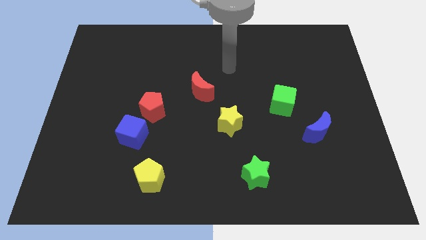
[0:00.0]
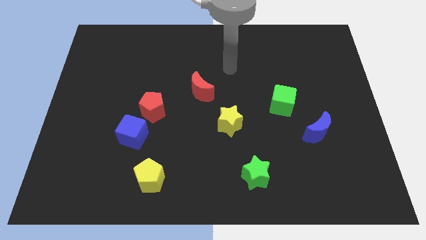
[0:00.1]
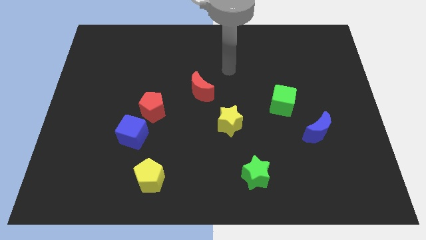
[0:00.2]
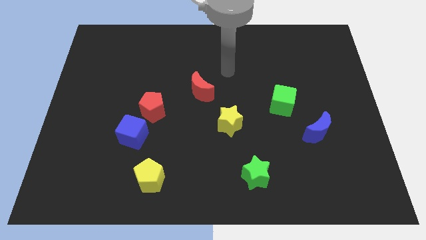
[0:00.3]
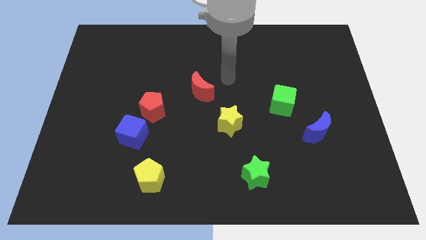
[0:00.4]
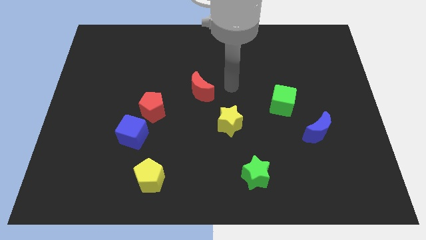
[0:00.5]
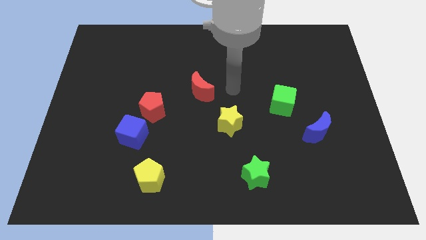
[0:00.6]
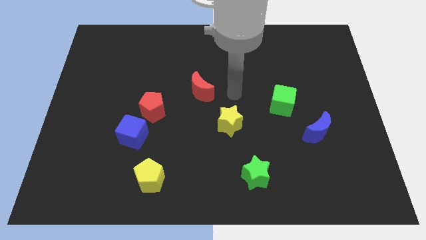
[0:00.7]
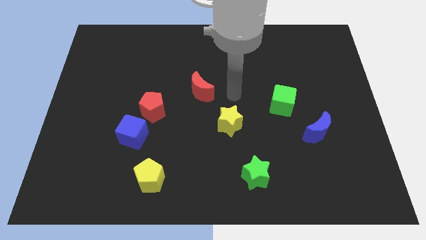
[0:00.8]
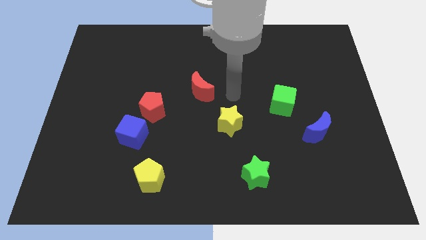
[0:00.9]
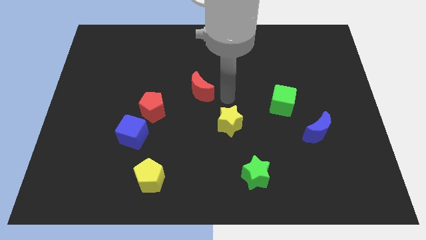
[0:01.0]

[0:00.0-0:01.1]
move your arm to the top of the yellow star

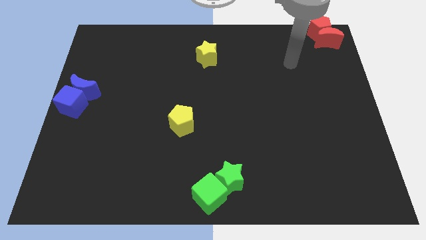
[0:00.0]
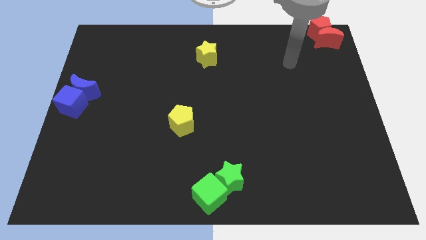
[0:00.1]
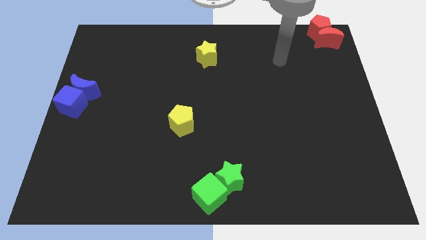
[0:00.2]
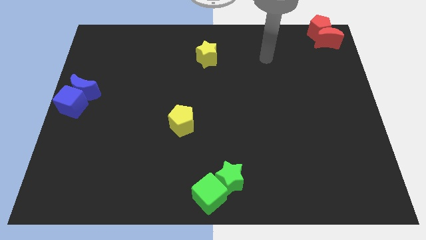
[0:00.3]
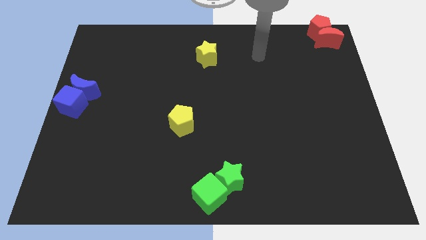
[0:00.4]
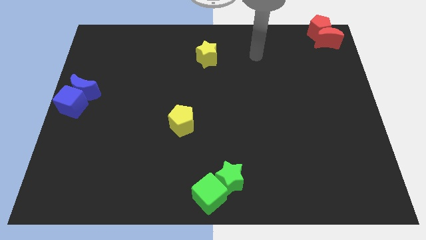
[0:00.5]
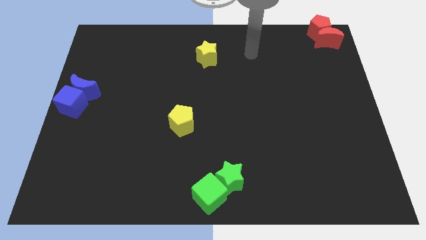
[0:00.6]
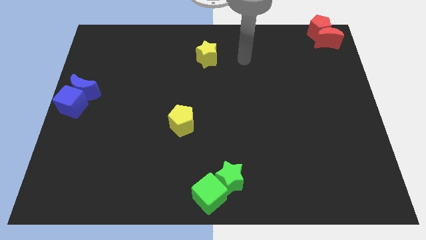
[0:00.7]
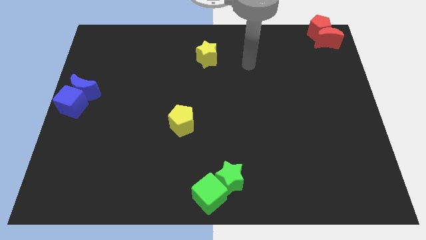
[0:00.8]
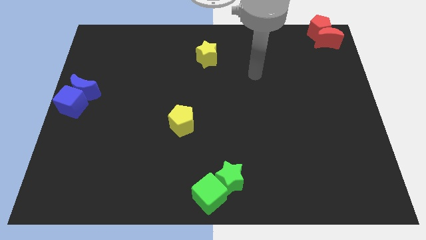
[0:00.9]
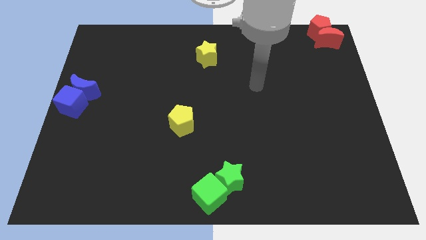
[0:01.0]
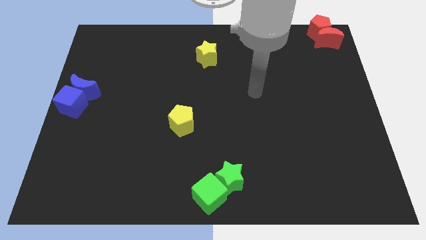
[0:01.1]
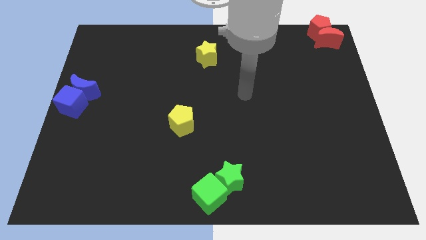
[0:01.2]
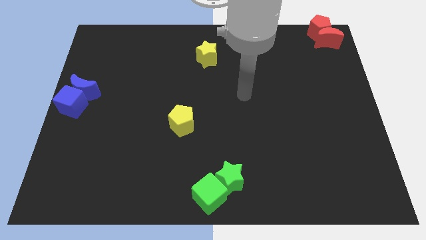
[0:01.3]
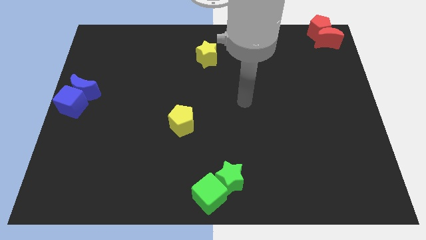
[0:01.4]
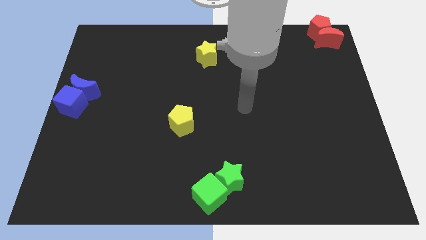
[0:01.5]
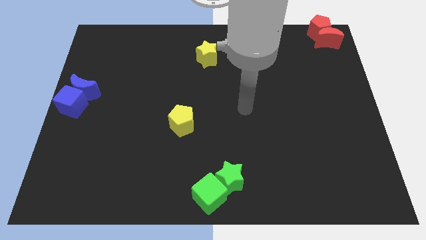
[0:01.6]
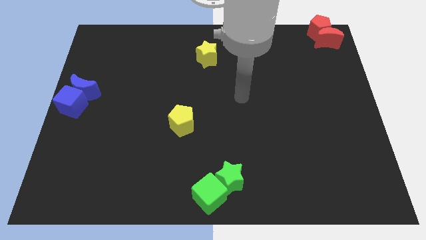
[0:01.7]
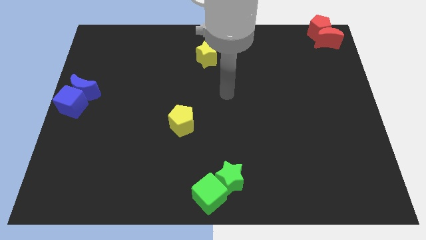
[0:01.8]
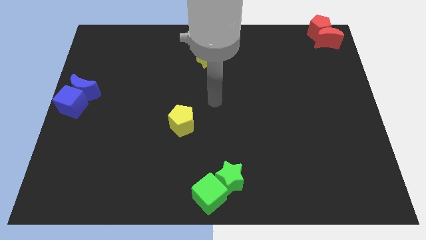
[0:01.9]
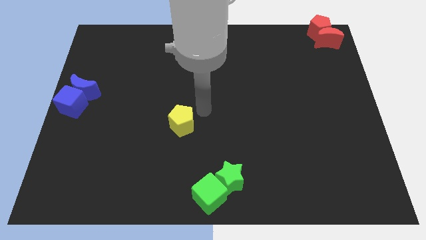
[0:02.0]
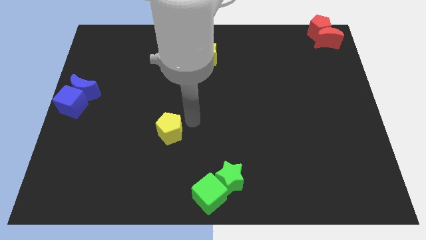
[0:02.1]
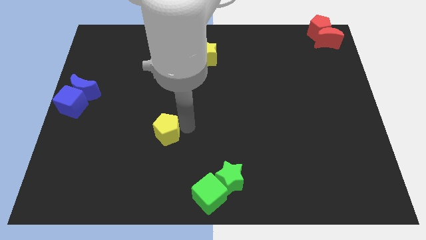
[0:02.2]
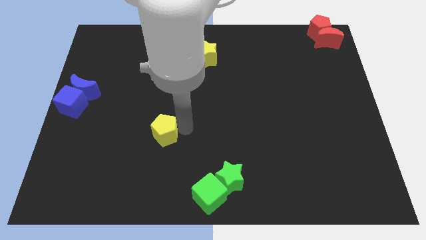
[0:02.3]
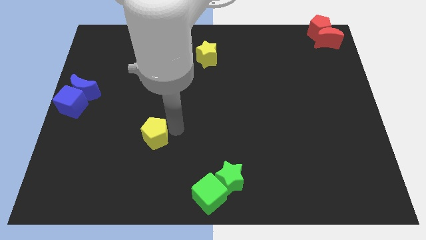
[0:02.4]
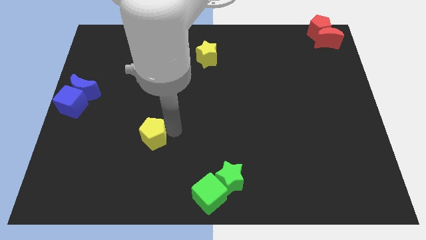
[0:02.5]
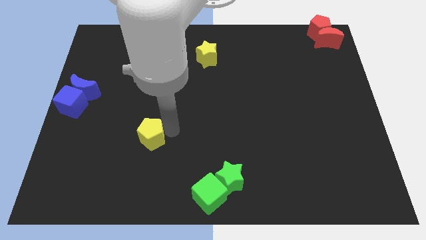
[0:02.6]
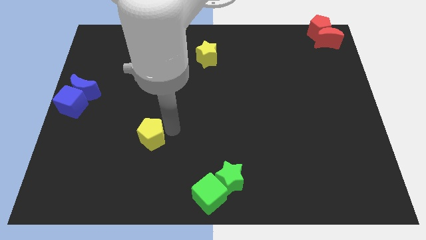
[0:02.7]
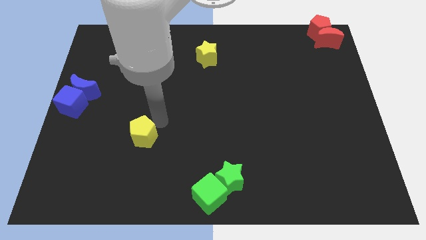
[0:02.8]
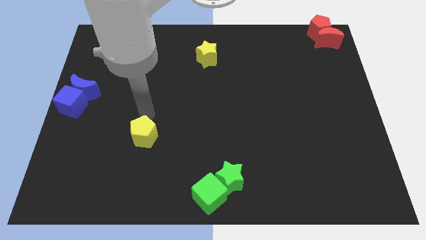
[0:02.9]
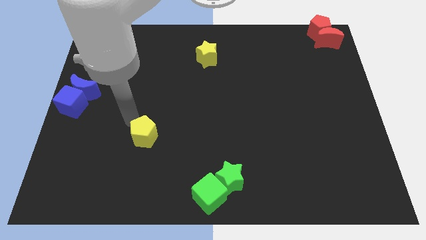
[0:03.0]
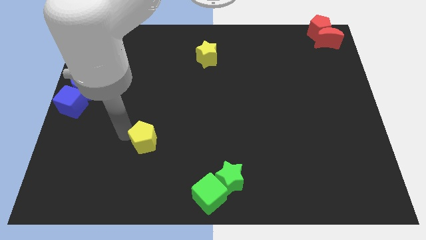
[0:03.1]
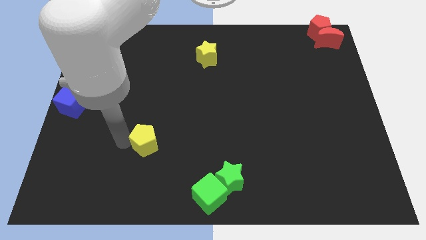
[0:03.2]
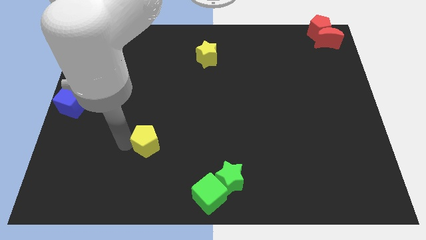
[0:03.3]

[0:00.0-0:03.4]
put the yellow pentagon diagonally in between the cubes

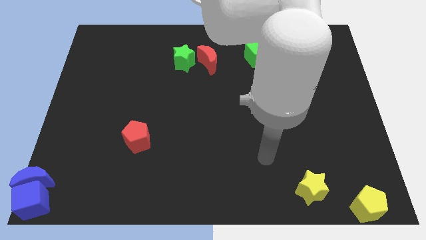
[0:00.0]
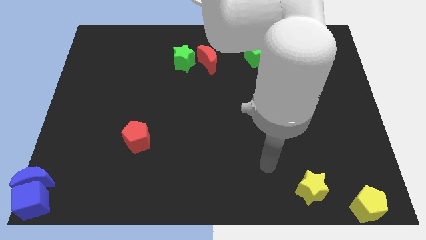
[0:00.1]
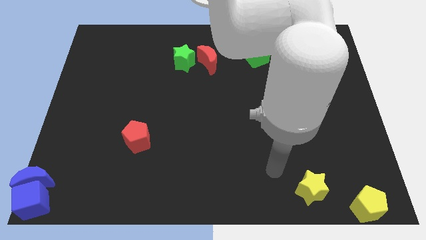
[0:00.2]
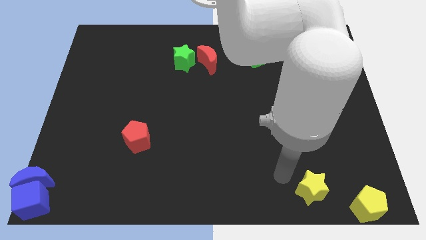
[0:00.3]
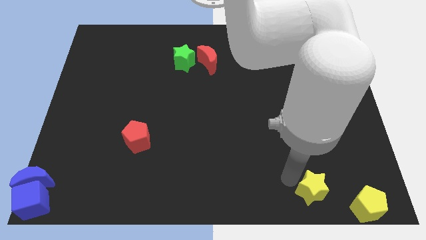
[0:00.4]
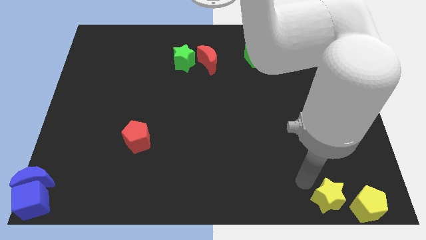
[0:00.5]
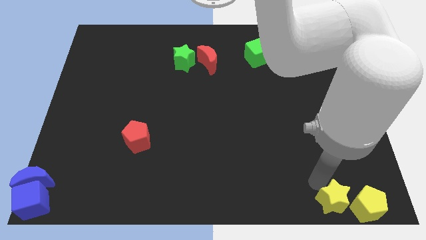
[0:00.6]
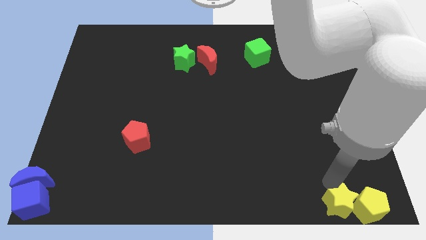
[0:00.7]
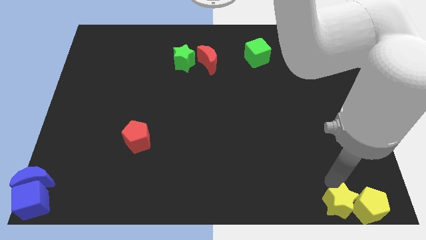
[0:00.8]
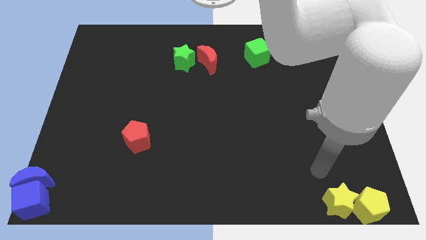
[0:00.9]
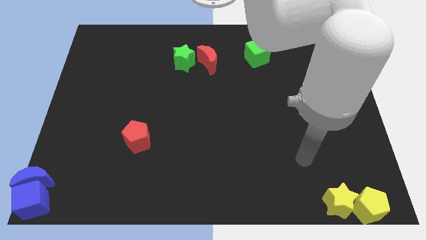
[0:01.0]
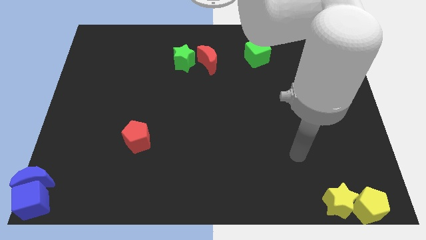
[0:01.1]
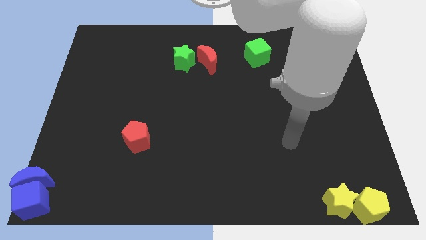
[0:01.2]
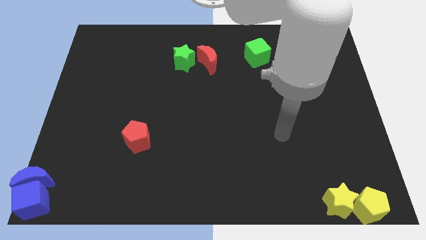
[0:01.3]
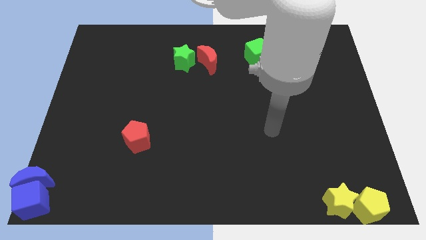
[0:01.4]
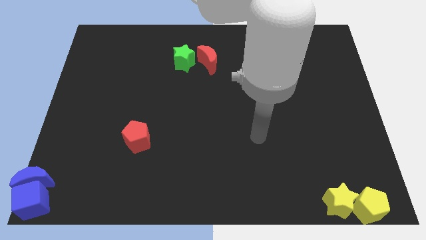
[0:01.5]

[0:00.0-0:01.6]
push the yellow star into the yellow pentagon

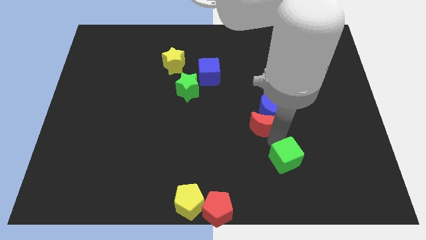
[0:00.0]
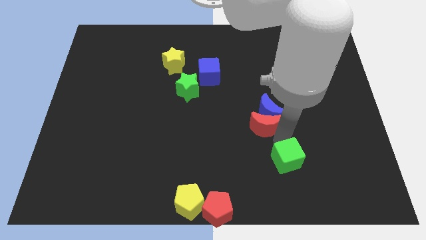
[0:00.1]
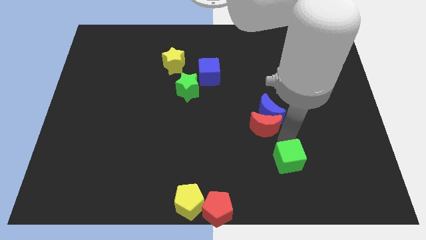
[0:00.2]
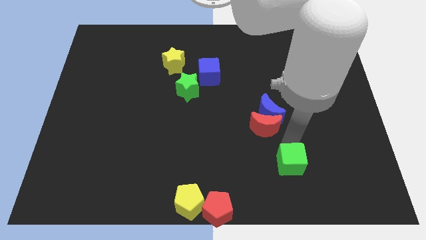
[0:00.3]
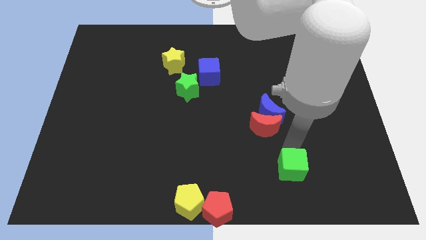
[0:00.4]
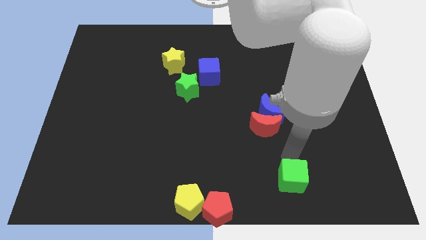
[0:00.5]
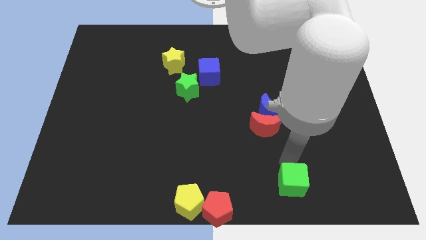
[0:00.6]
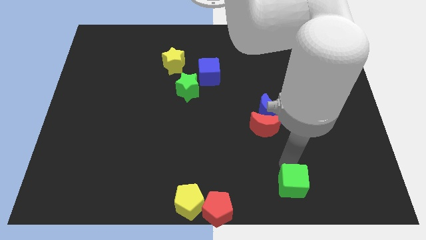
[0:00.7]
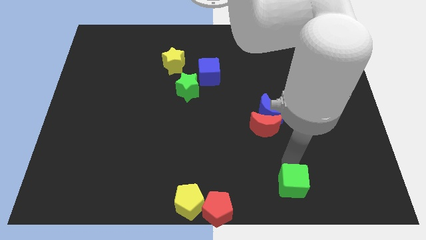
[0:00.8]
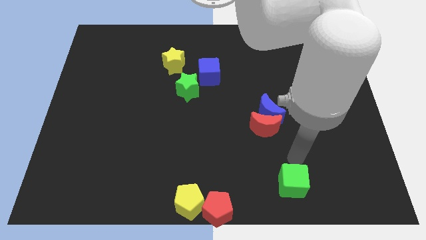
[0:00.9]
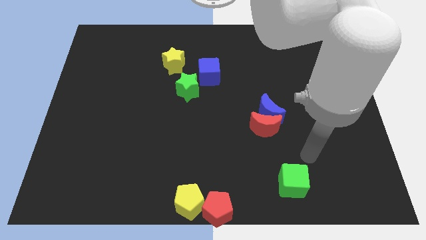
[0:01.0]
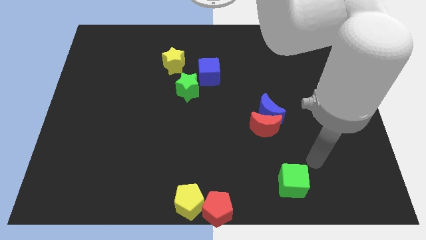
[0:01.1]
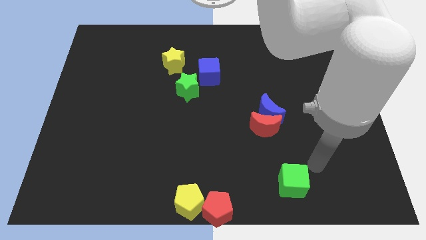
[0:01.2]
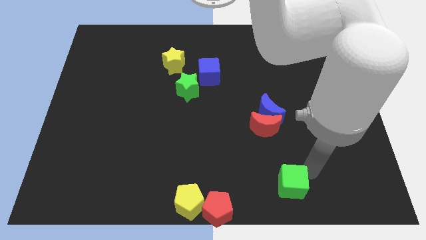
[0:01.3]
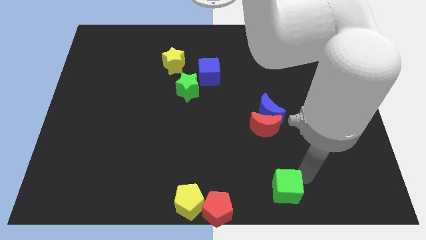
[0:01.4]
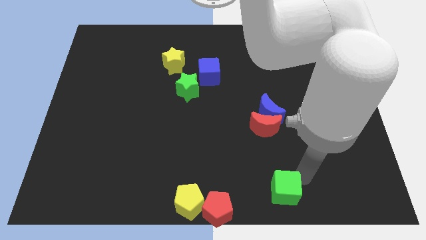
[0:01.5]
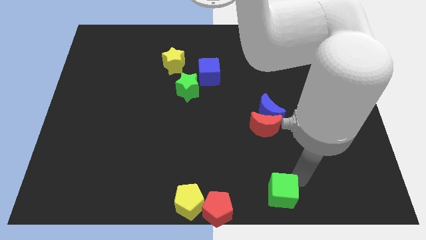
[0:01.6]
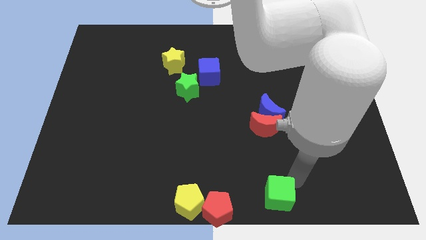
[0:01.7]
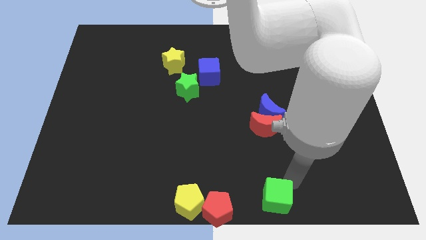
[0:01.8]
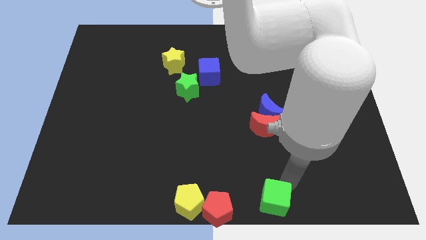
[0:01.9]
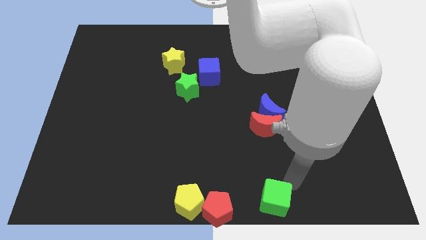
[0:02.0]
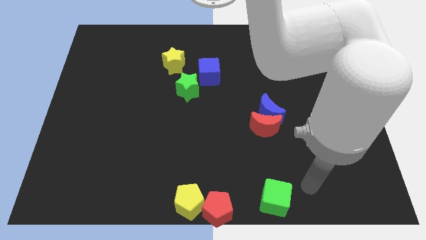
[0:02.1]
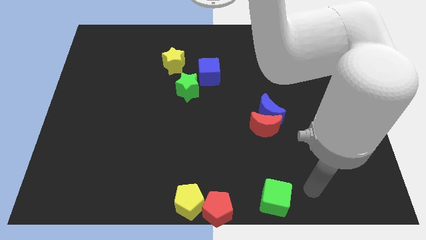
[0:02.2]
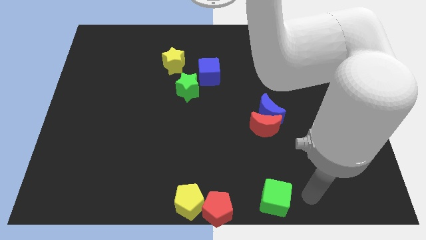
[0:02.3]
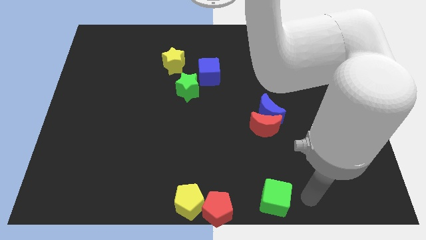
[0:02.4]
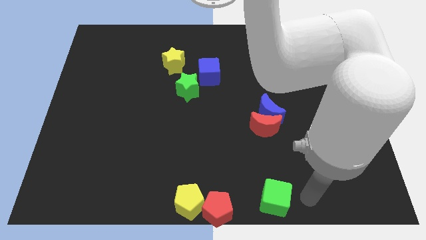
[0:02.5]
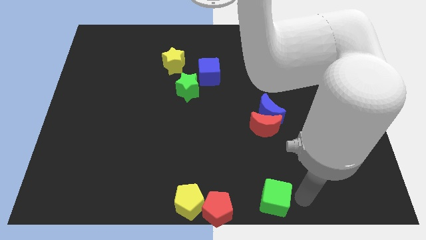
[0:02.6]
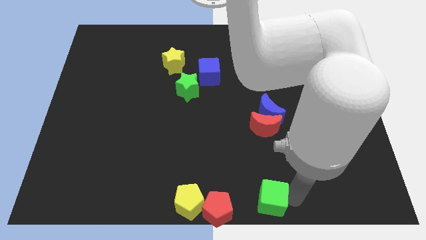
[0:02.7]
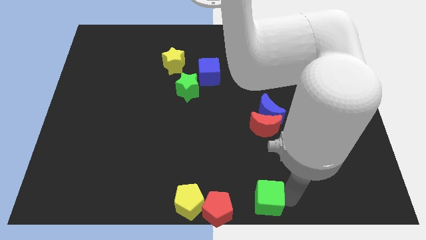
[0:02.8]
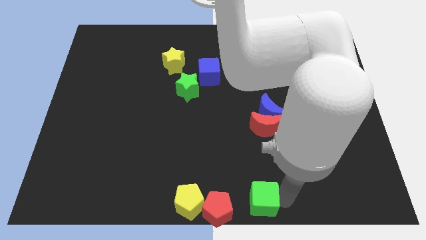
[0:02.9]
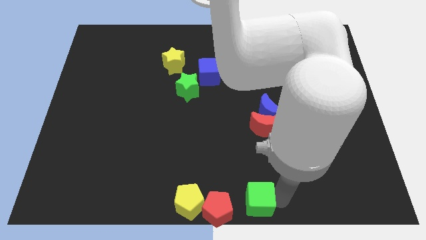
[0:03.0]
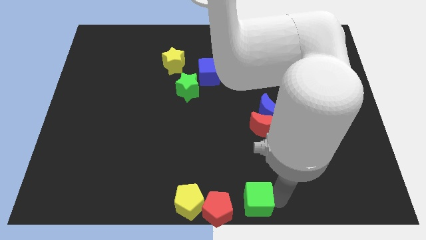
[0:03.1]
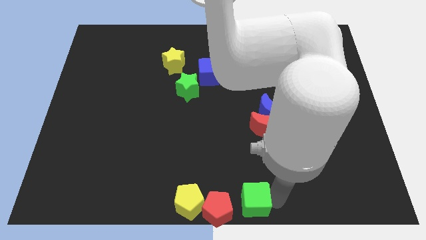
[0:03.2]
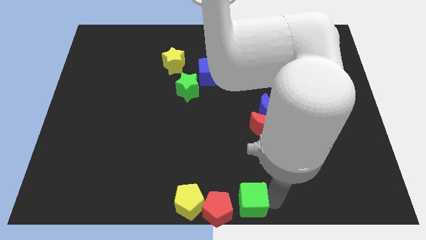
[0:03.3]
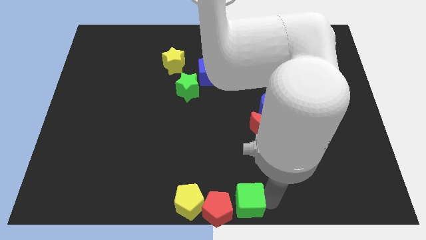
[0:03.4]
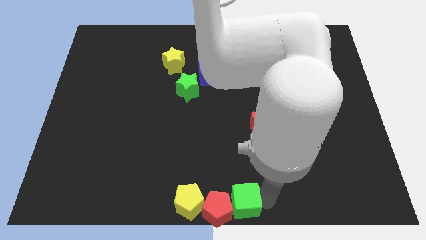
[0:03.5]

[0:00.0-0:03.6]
push the green cube to the bottom center of the board
